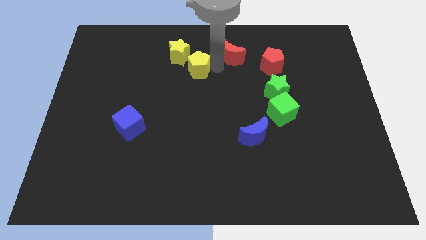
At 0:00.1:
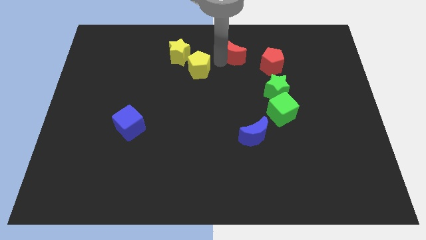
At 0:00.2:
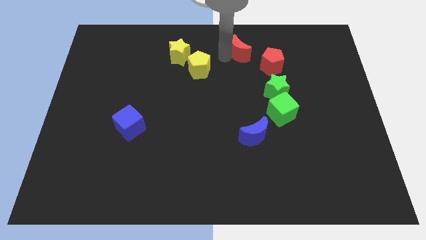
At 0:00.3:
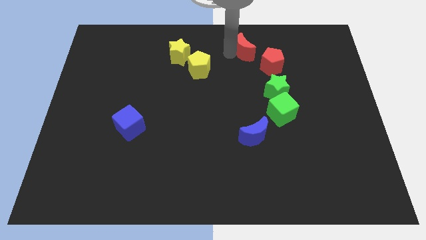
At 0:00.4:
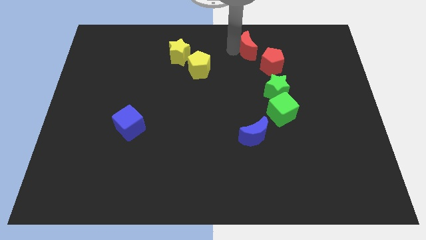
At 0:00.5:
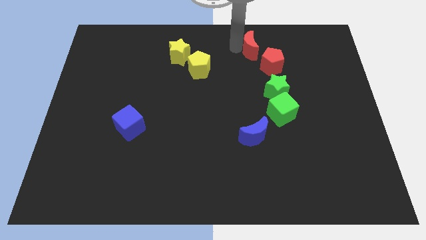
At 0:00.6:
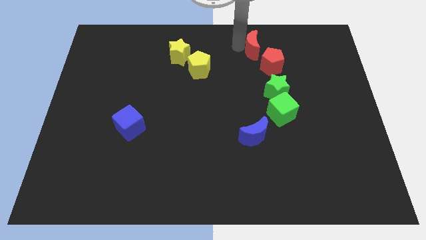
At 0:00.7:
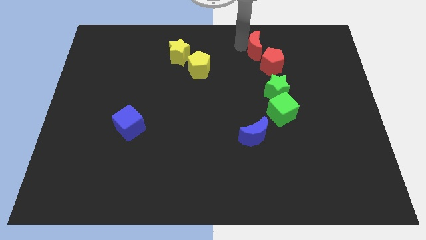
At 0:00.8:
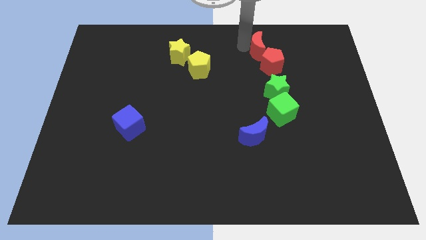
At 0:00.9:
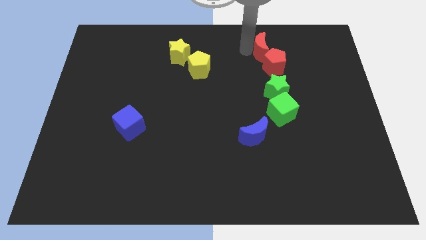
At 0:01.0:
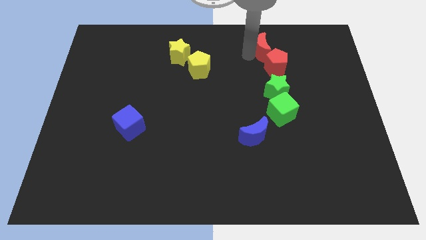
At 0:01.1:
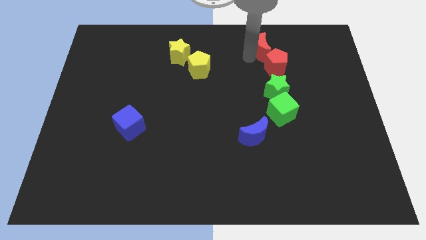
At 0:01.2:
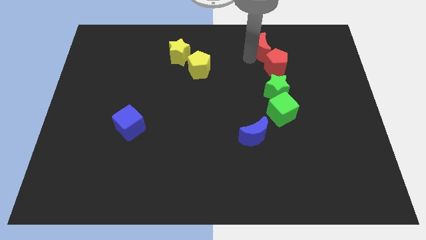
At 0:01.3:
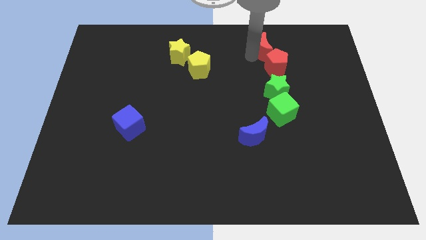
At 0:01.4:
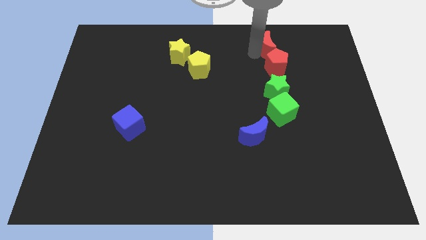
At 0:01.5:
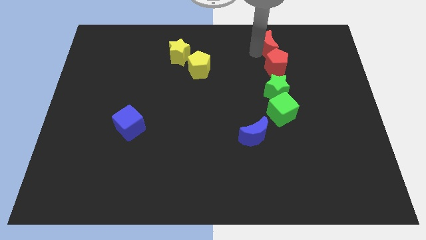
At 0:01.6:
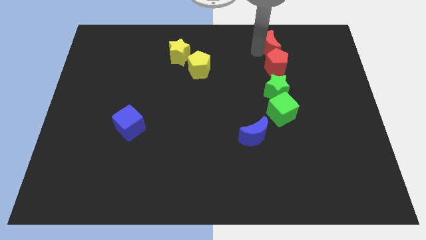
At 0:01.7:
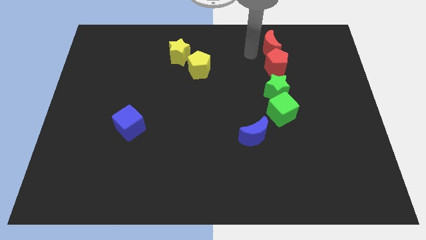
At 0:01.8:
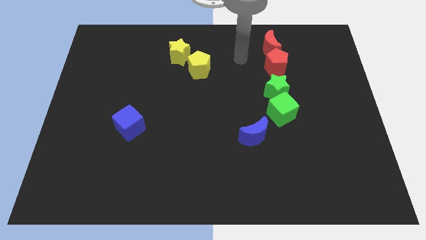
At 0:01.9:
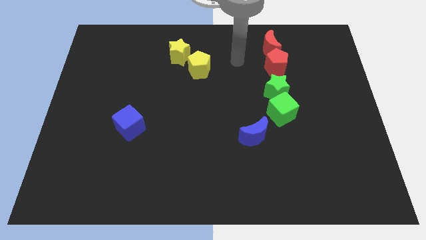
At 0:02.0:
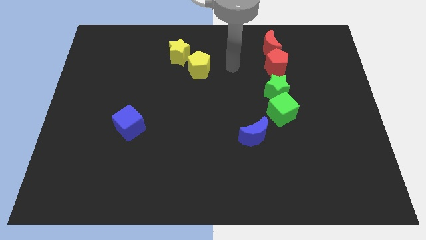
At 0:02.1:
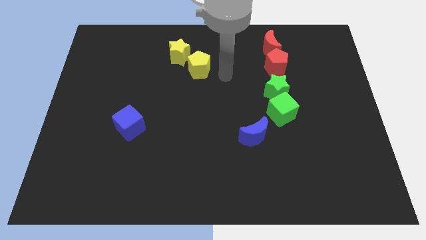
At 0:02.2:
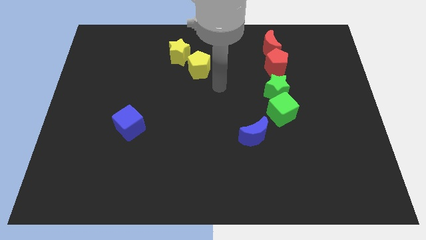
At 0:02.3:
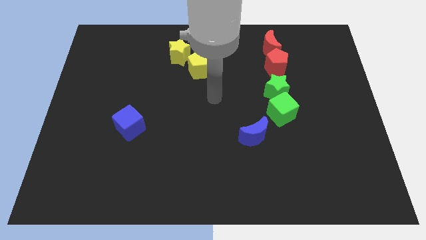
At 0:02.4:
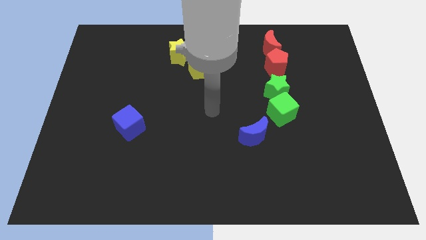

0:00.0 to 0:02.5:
push the red crescent to the top right of the yellow pentagon

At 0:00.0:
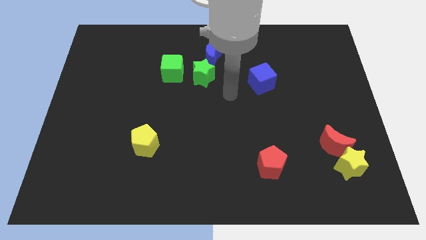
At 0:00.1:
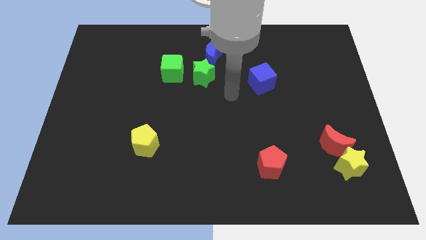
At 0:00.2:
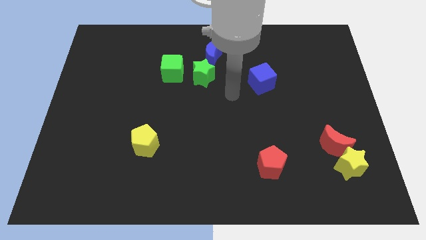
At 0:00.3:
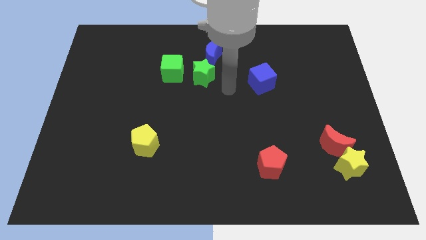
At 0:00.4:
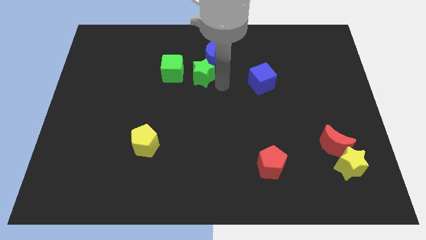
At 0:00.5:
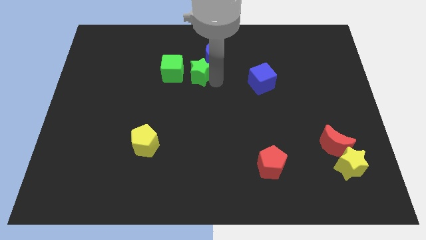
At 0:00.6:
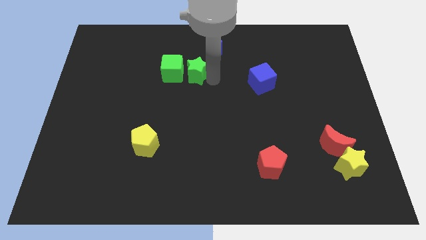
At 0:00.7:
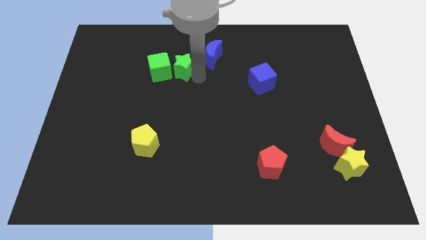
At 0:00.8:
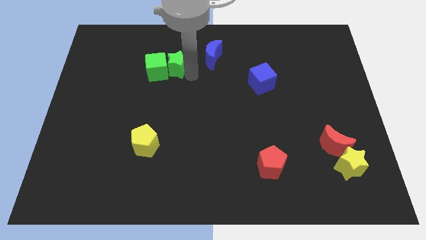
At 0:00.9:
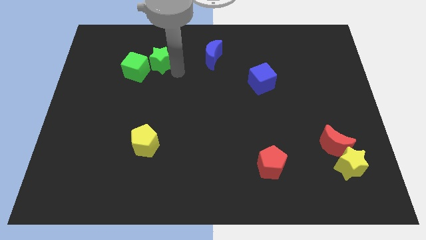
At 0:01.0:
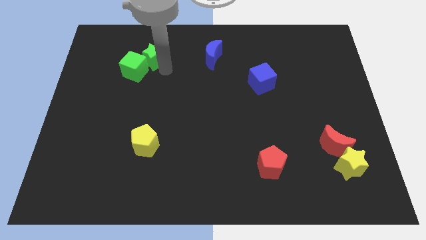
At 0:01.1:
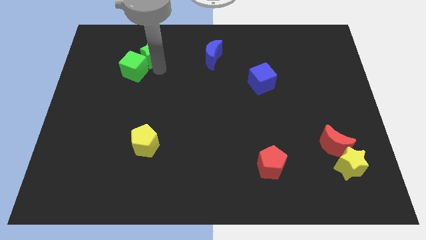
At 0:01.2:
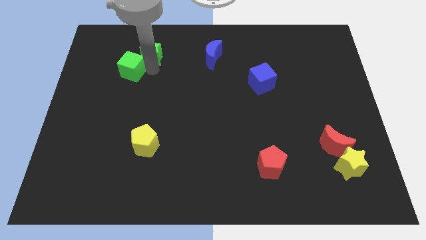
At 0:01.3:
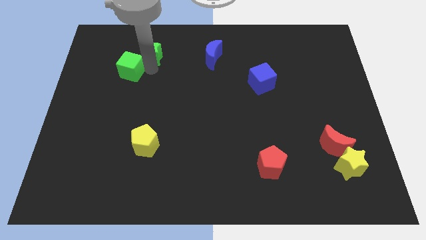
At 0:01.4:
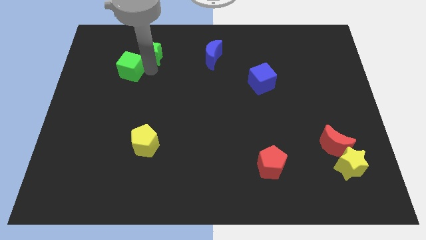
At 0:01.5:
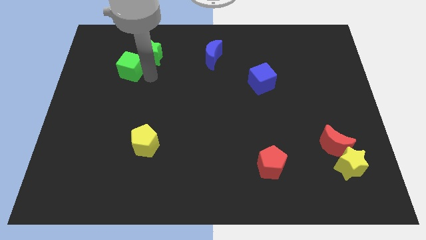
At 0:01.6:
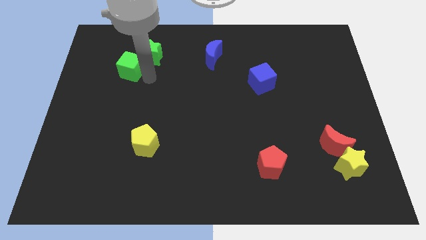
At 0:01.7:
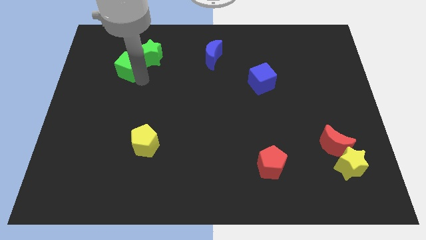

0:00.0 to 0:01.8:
push the green star into the green cube

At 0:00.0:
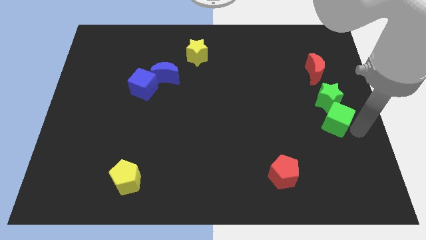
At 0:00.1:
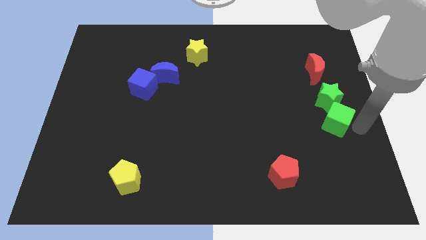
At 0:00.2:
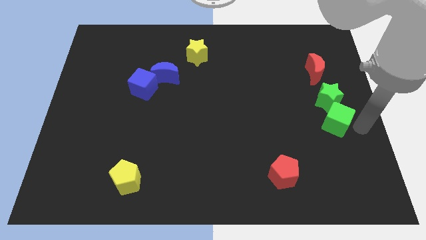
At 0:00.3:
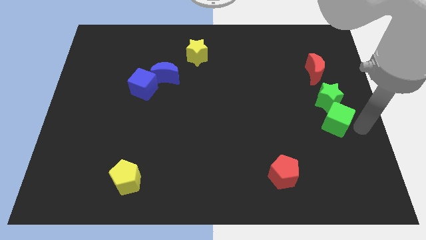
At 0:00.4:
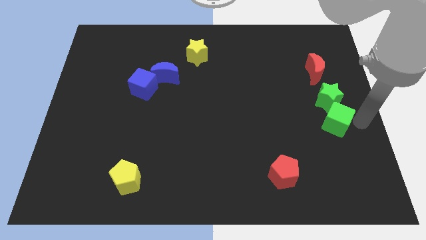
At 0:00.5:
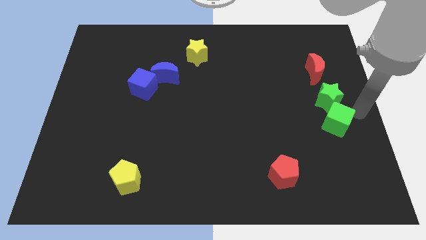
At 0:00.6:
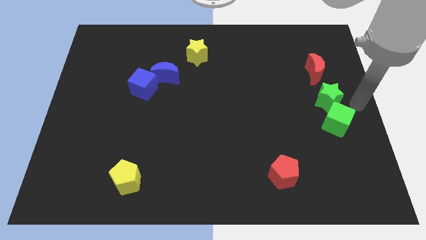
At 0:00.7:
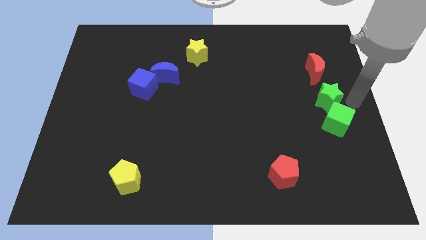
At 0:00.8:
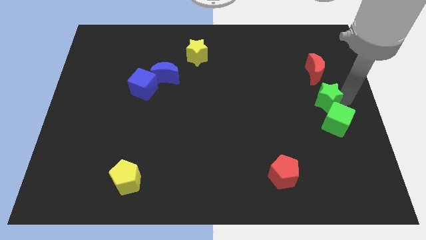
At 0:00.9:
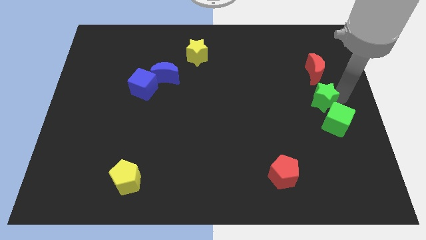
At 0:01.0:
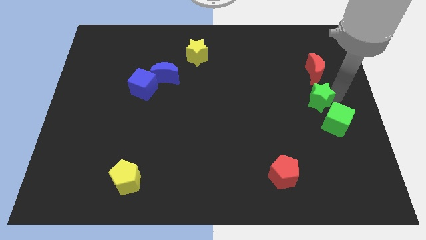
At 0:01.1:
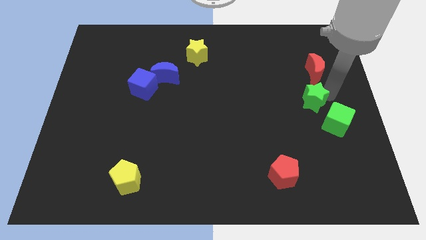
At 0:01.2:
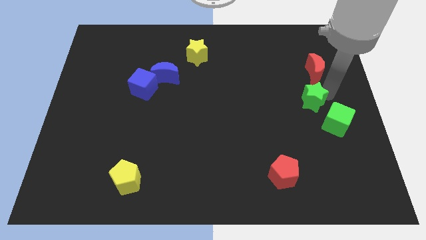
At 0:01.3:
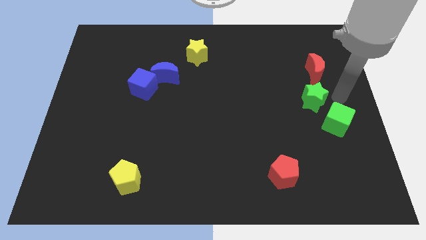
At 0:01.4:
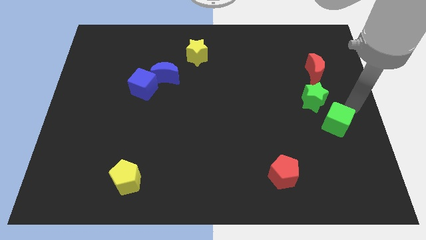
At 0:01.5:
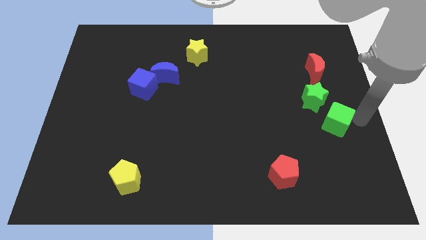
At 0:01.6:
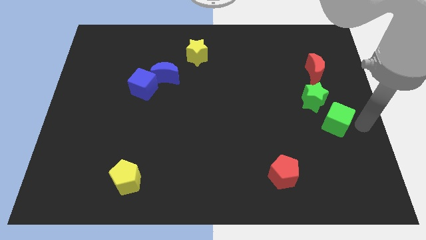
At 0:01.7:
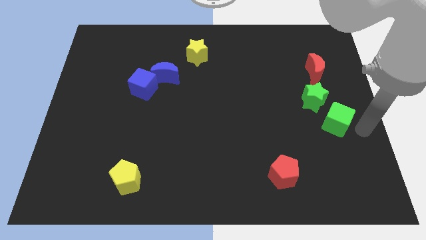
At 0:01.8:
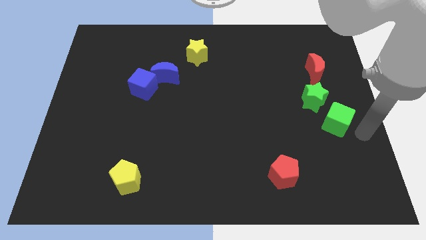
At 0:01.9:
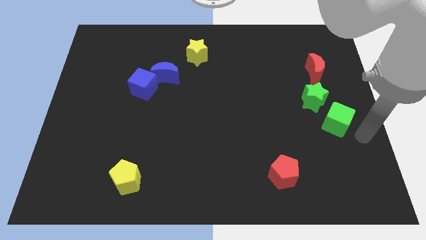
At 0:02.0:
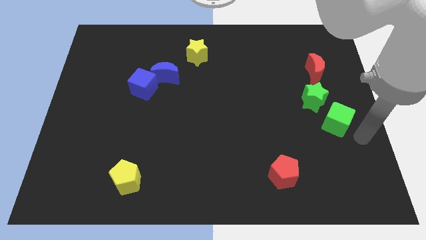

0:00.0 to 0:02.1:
slightly push the green star below red moon

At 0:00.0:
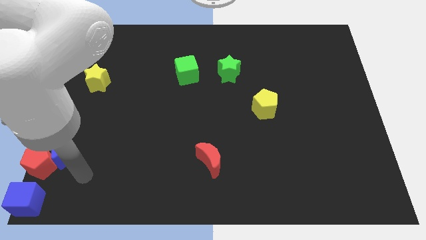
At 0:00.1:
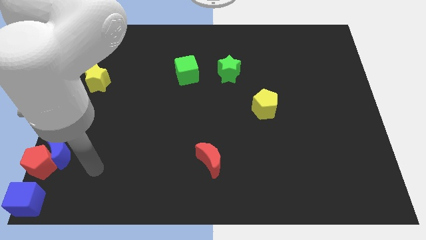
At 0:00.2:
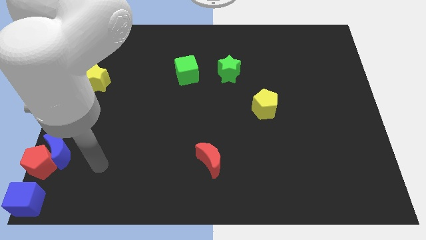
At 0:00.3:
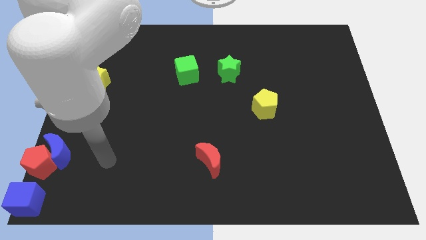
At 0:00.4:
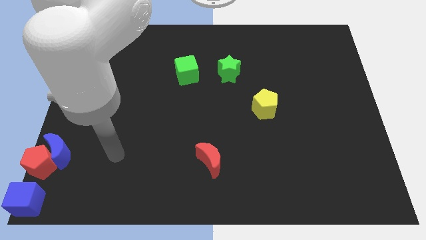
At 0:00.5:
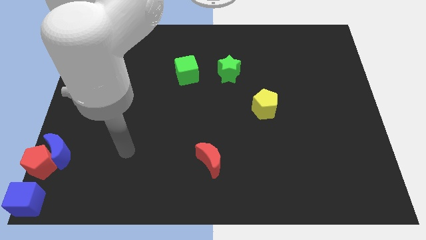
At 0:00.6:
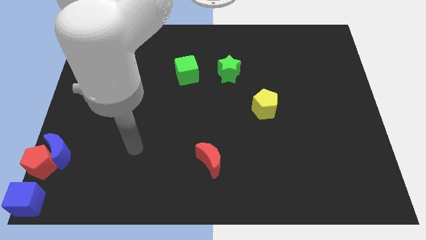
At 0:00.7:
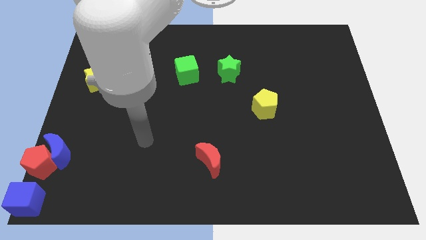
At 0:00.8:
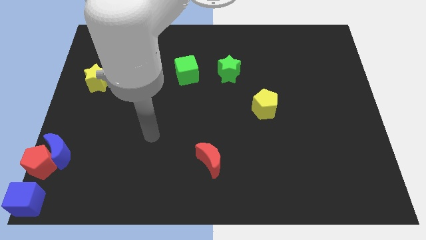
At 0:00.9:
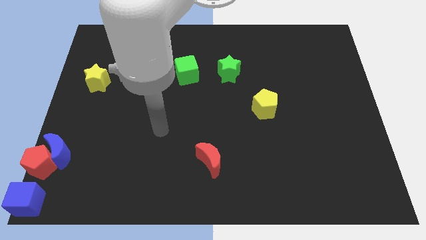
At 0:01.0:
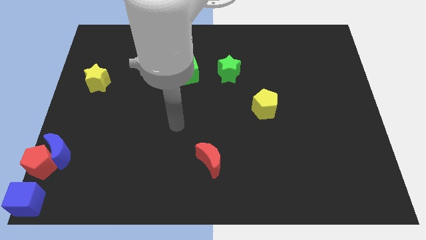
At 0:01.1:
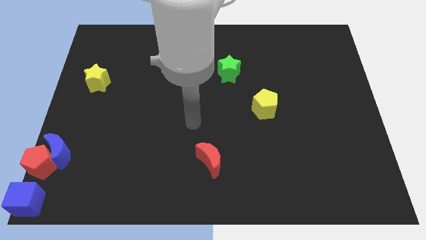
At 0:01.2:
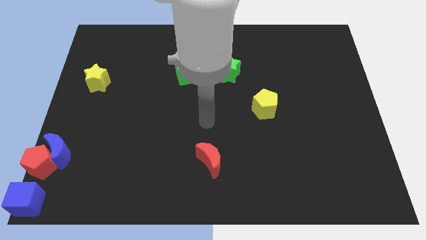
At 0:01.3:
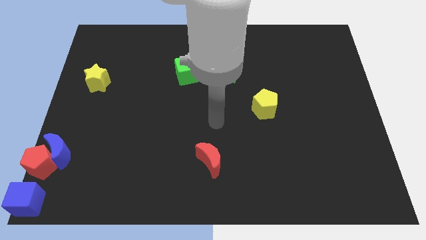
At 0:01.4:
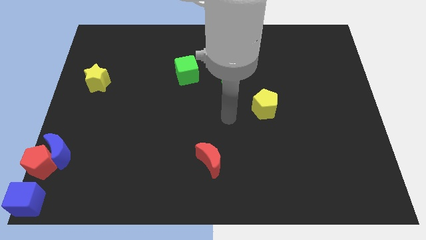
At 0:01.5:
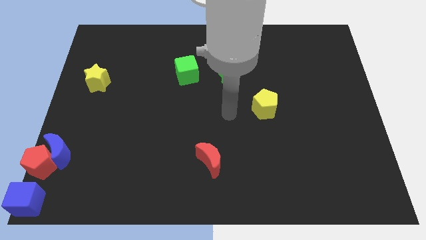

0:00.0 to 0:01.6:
move your arm to the left of the yellow pentagon

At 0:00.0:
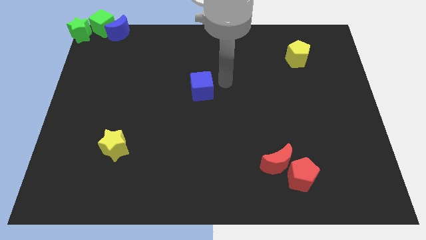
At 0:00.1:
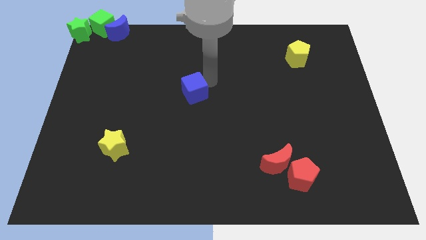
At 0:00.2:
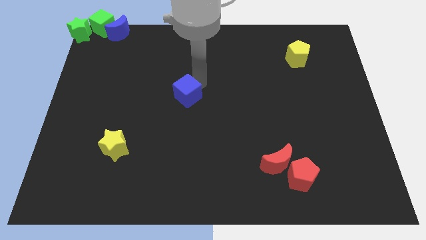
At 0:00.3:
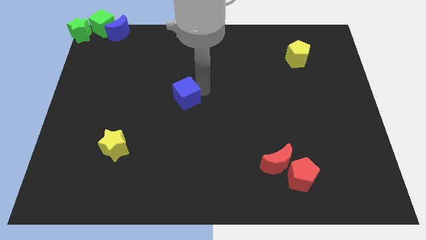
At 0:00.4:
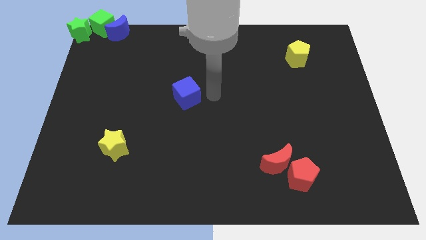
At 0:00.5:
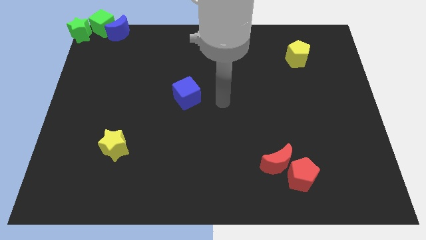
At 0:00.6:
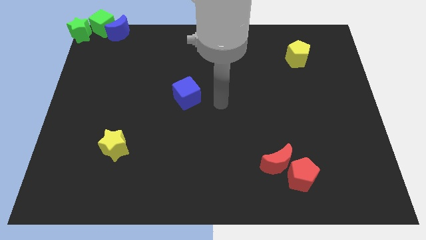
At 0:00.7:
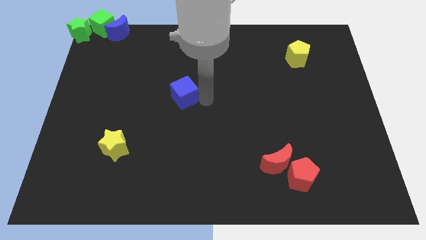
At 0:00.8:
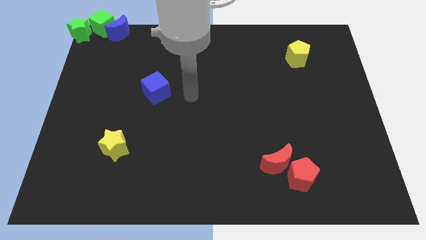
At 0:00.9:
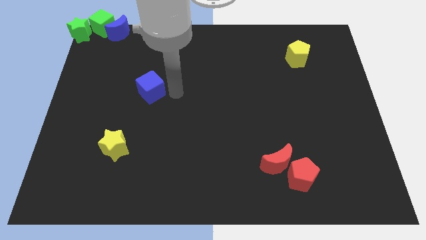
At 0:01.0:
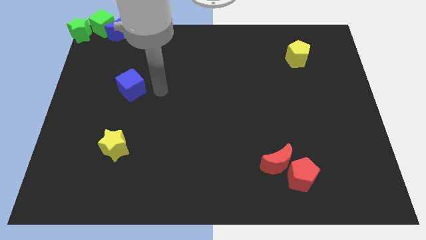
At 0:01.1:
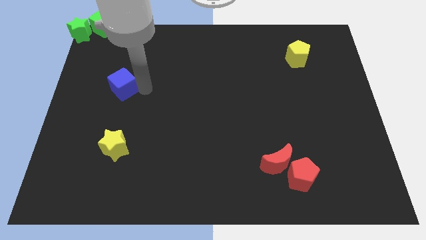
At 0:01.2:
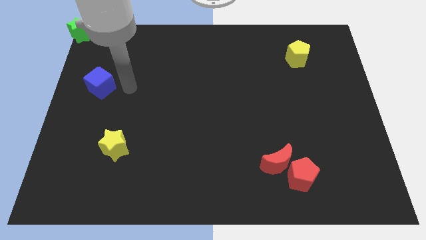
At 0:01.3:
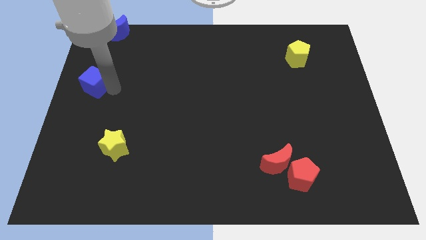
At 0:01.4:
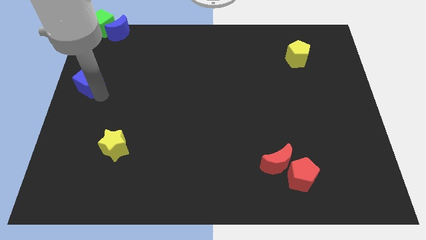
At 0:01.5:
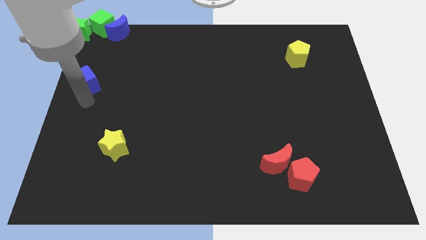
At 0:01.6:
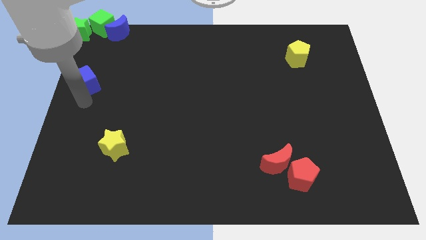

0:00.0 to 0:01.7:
move the blue cube vertically below the green cube
